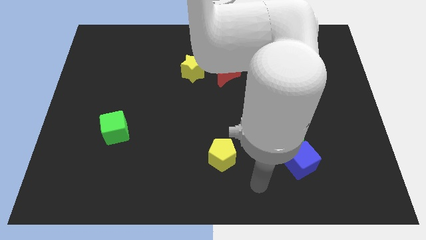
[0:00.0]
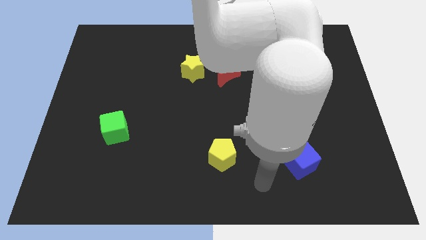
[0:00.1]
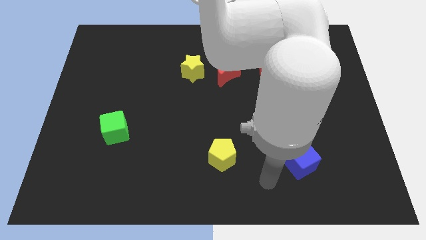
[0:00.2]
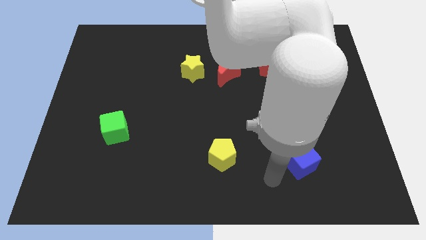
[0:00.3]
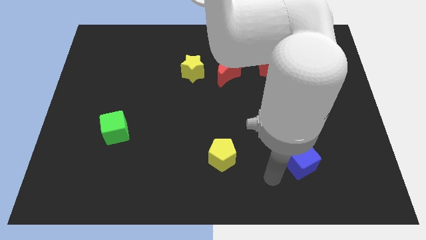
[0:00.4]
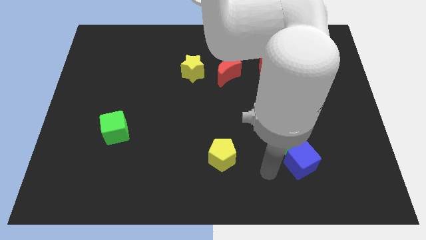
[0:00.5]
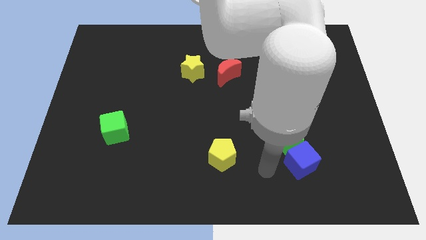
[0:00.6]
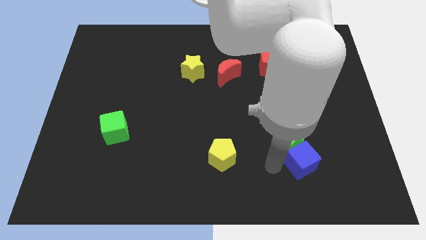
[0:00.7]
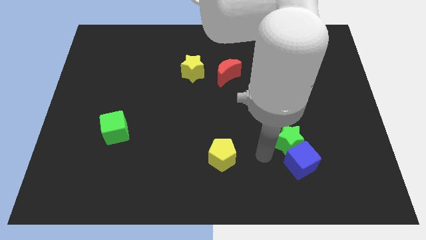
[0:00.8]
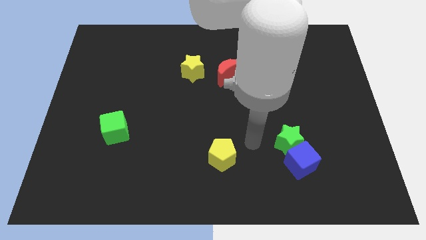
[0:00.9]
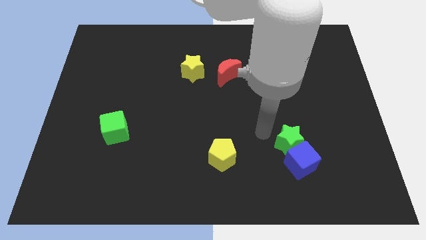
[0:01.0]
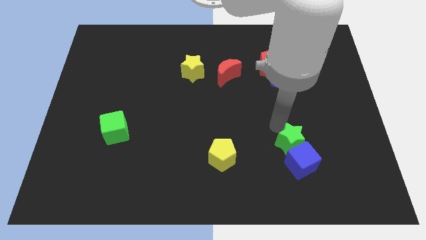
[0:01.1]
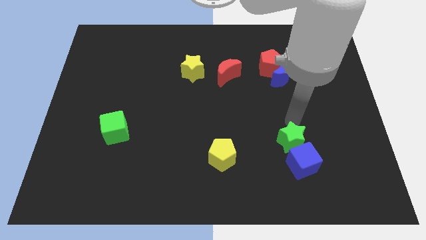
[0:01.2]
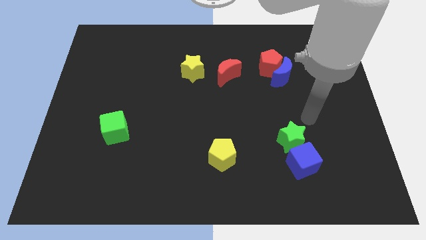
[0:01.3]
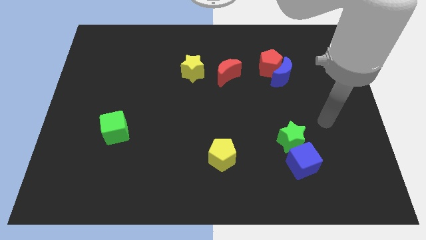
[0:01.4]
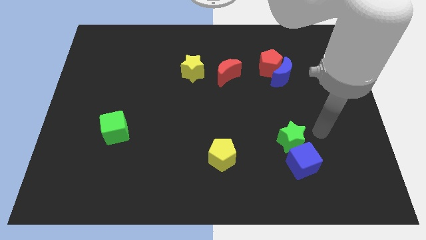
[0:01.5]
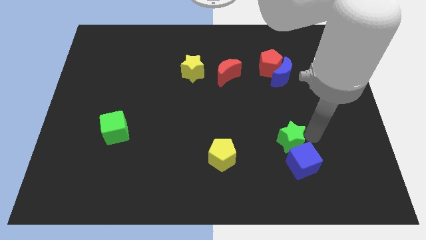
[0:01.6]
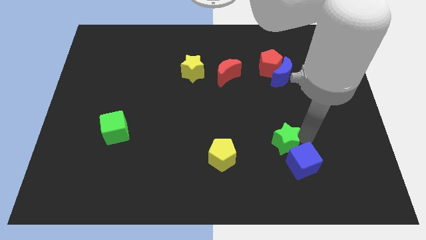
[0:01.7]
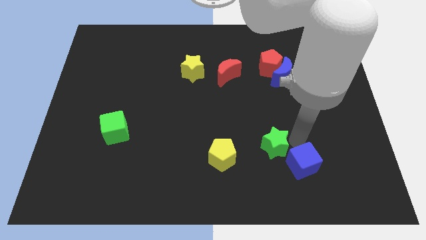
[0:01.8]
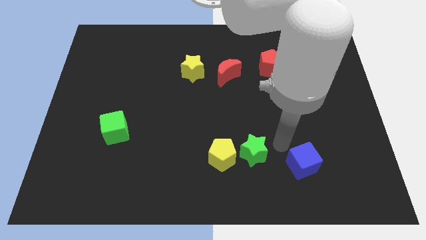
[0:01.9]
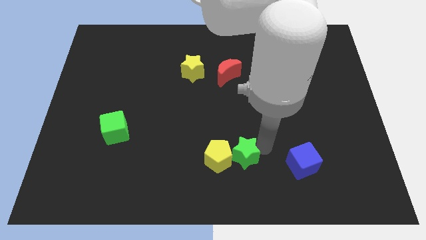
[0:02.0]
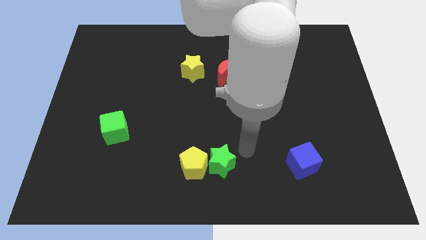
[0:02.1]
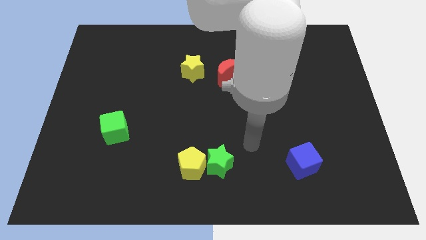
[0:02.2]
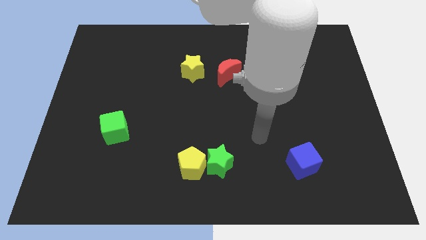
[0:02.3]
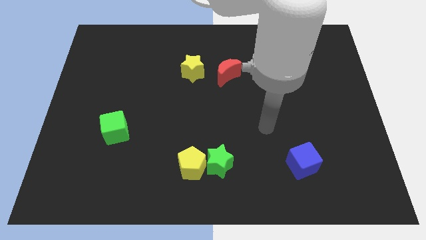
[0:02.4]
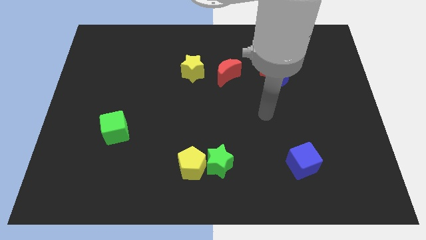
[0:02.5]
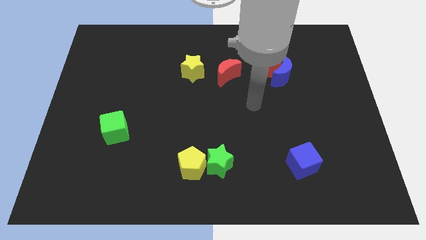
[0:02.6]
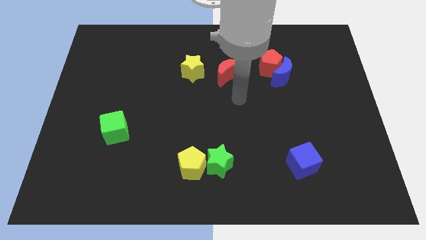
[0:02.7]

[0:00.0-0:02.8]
push the green star into the yellow pentagon

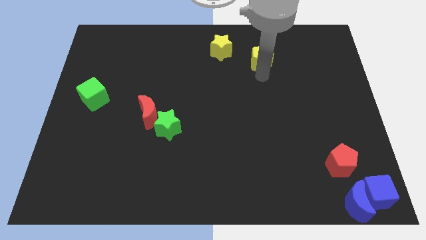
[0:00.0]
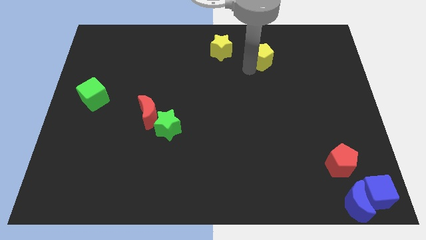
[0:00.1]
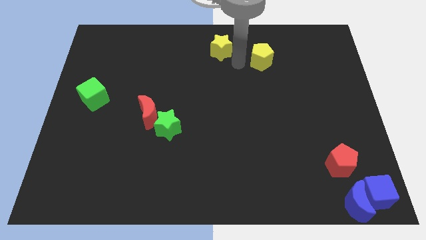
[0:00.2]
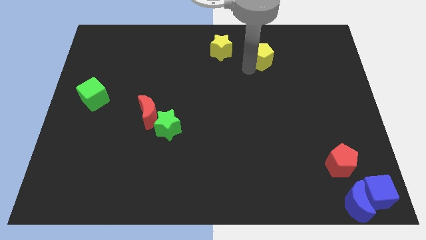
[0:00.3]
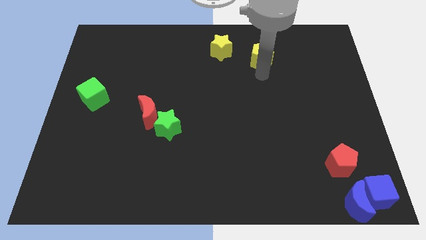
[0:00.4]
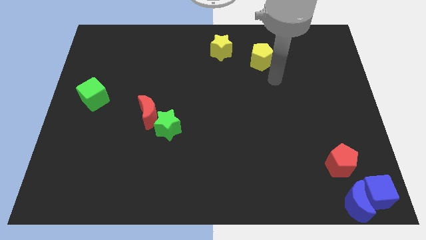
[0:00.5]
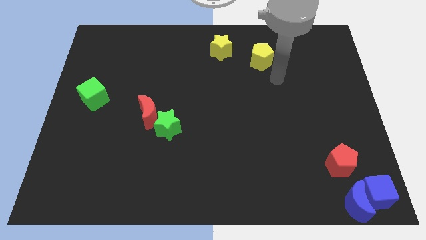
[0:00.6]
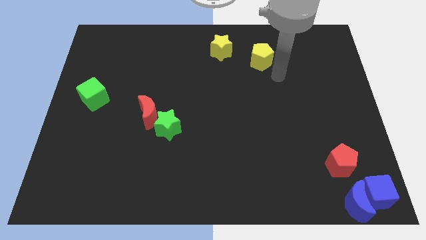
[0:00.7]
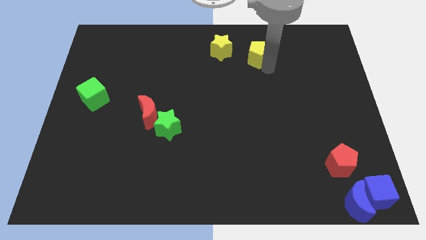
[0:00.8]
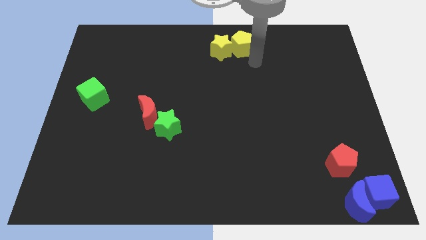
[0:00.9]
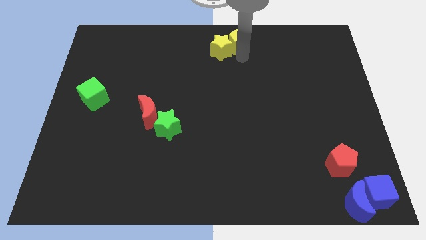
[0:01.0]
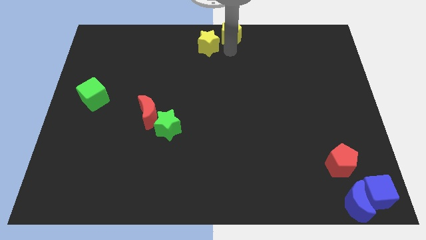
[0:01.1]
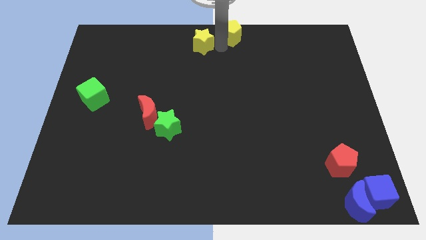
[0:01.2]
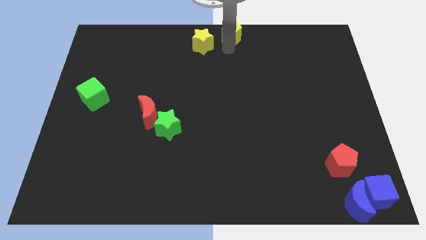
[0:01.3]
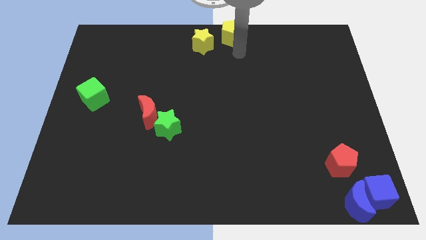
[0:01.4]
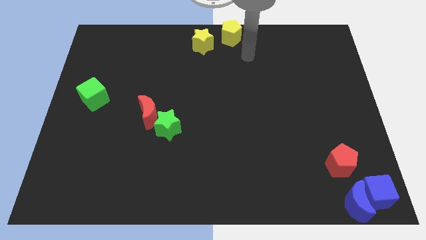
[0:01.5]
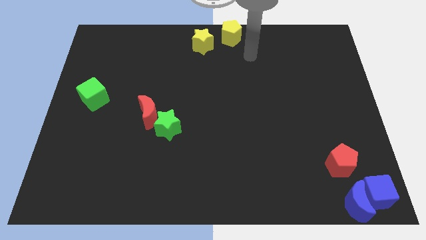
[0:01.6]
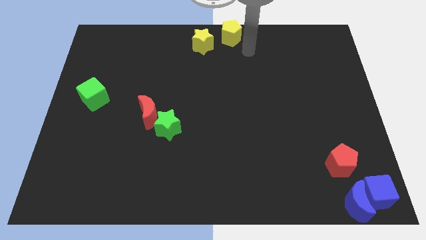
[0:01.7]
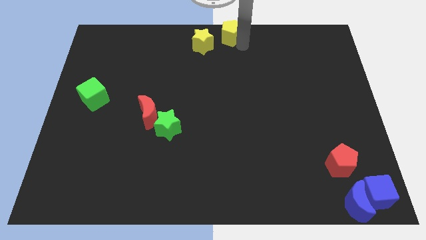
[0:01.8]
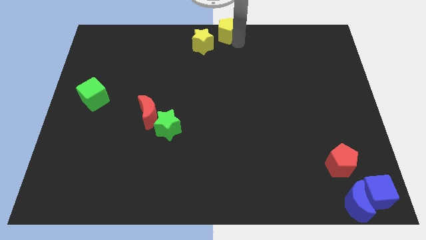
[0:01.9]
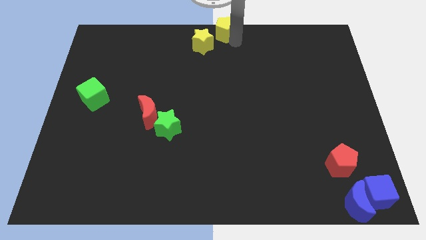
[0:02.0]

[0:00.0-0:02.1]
move yellow pentagon to top center along with yellow star

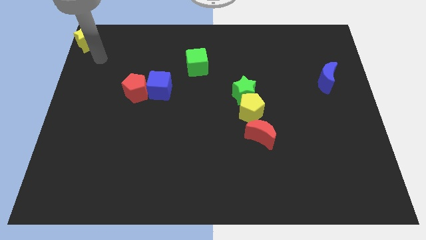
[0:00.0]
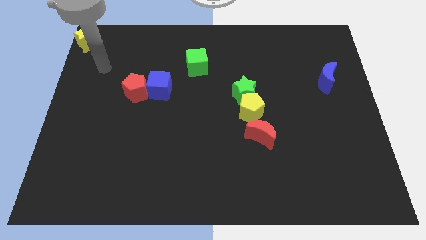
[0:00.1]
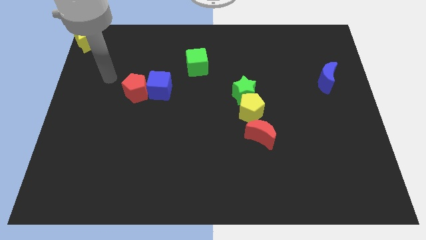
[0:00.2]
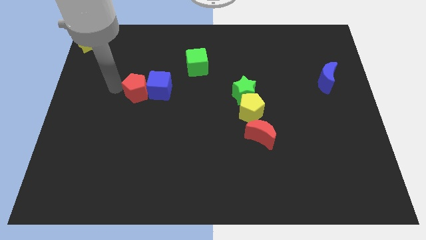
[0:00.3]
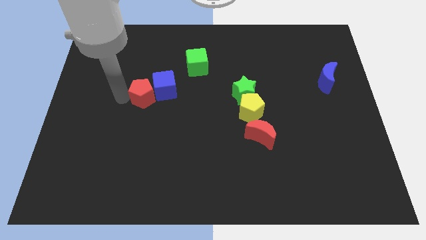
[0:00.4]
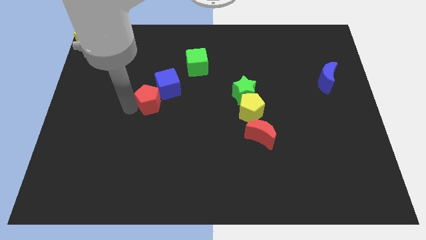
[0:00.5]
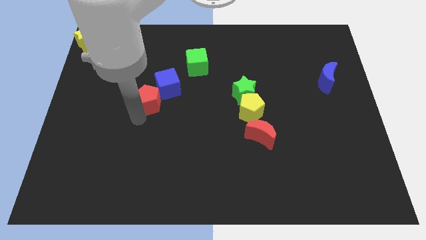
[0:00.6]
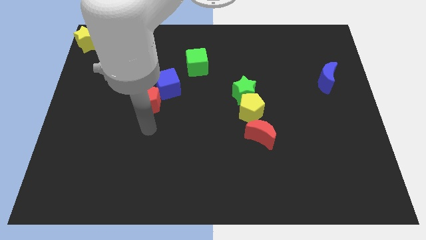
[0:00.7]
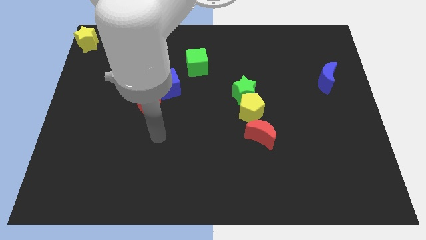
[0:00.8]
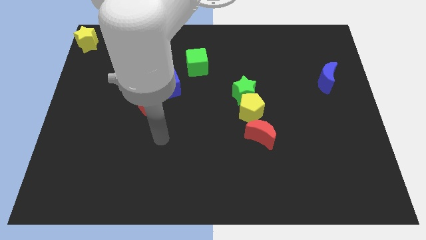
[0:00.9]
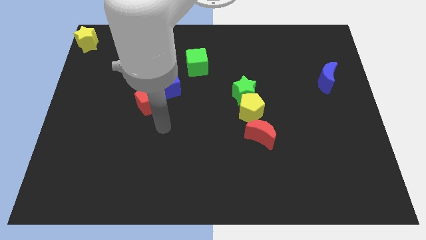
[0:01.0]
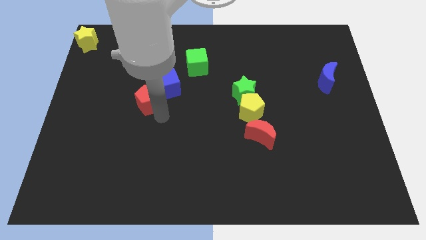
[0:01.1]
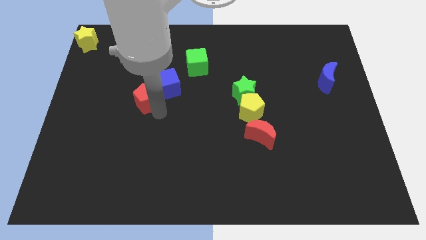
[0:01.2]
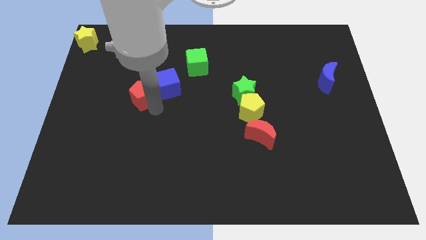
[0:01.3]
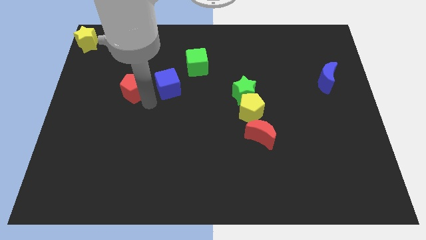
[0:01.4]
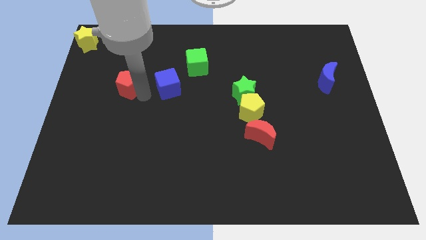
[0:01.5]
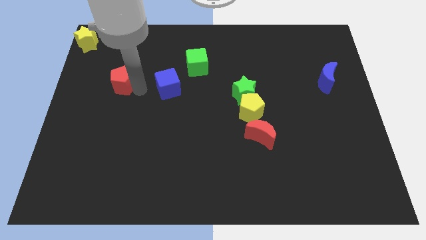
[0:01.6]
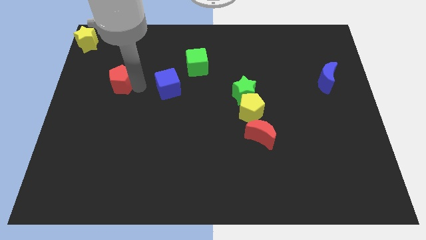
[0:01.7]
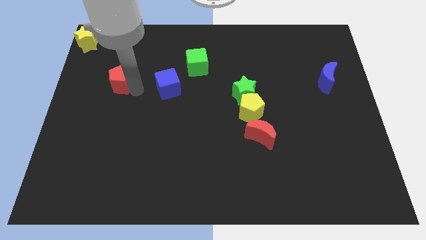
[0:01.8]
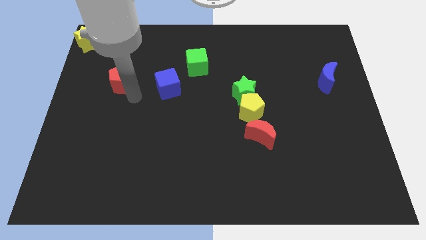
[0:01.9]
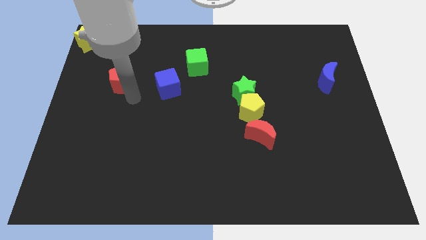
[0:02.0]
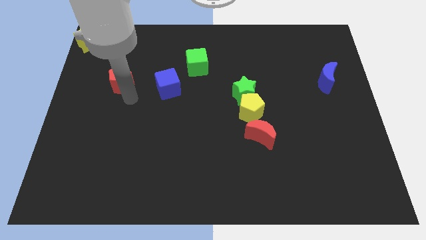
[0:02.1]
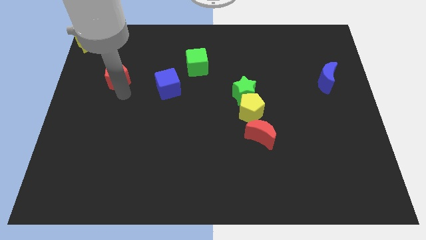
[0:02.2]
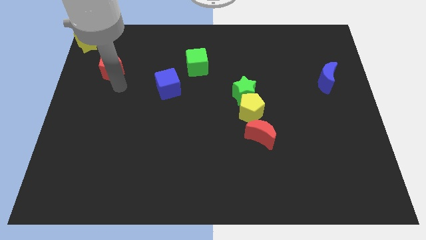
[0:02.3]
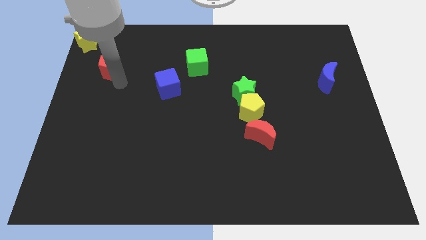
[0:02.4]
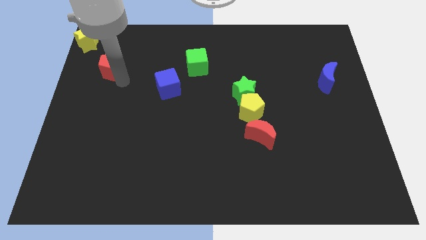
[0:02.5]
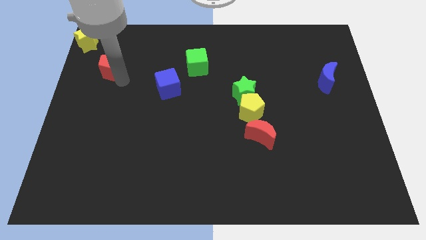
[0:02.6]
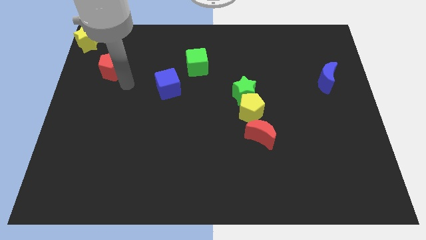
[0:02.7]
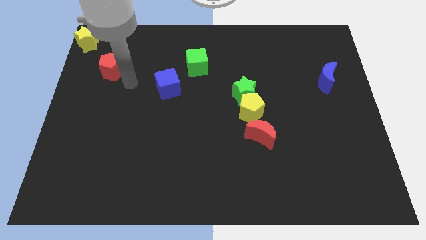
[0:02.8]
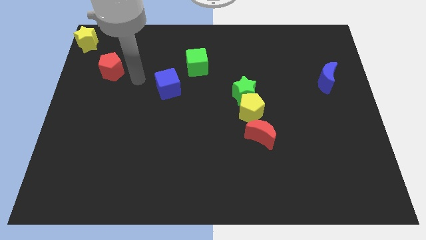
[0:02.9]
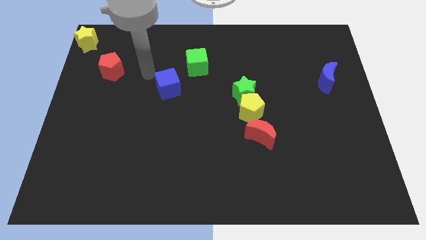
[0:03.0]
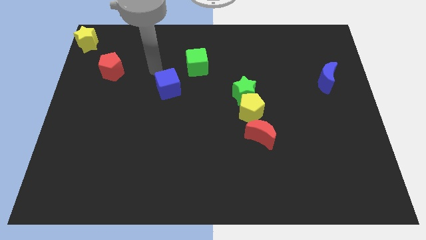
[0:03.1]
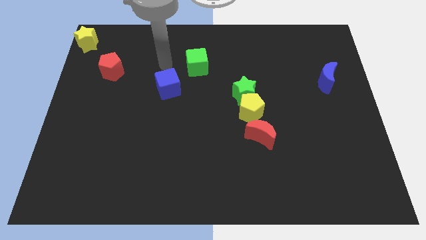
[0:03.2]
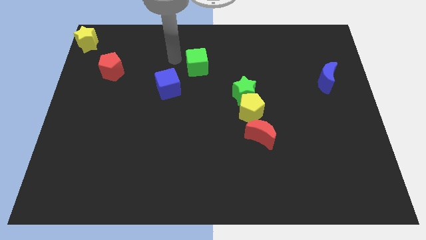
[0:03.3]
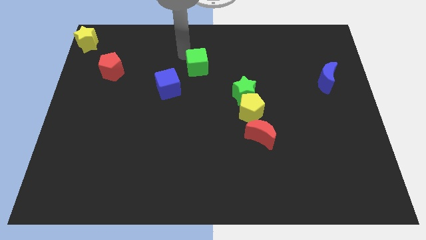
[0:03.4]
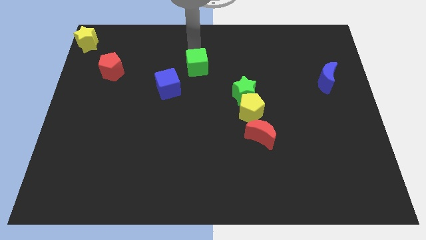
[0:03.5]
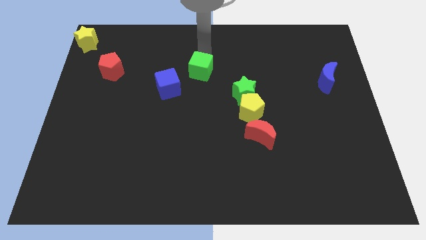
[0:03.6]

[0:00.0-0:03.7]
separate the red pentagon from the blue cube

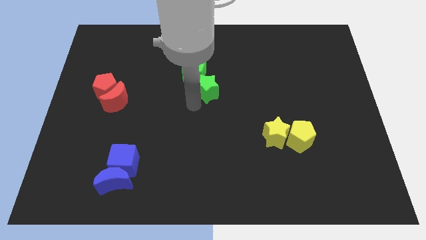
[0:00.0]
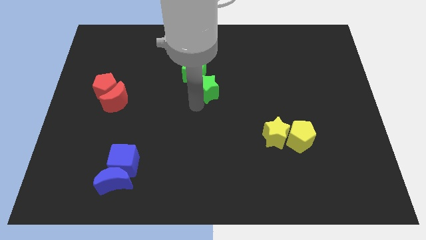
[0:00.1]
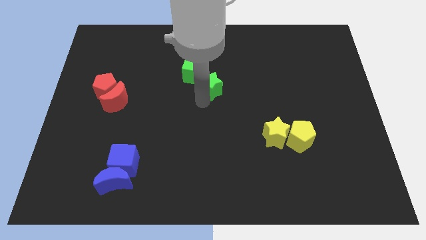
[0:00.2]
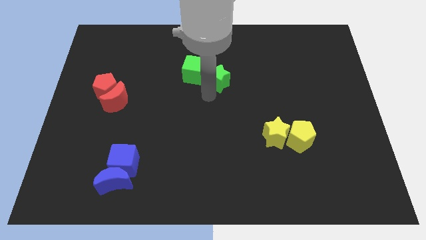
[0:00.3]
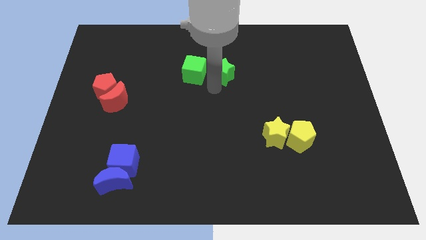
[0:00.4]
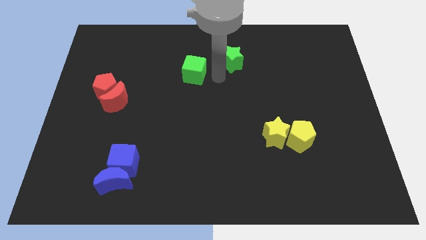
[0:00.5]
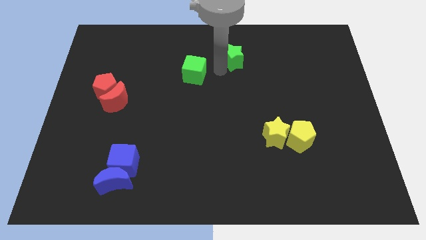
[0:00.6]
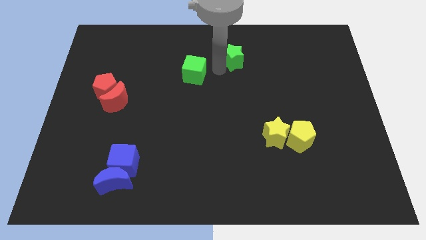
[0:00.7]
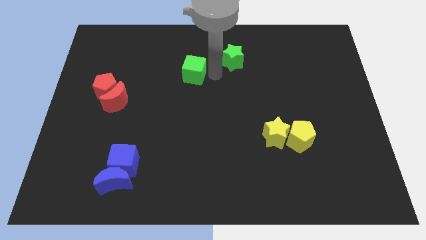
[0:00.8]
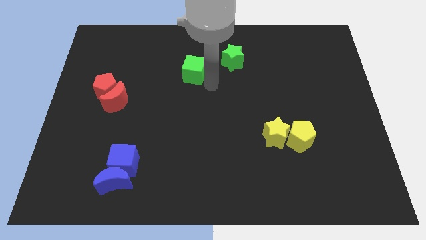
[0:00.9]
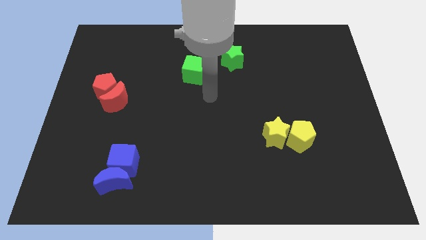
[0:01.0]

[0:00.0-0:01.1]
drag green star slight upside of the board
